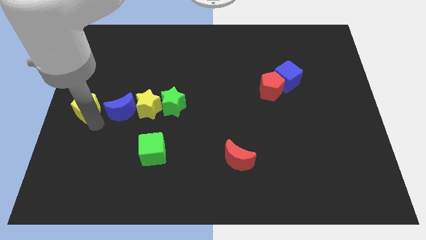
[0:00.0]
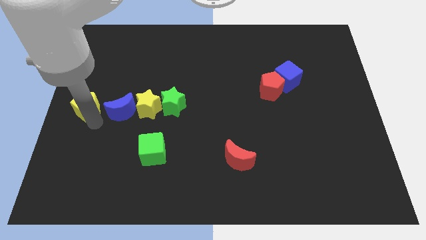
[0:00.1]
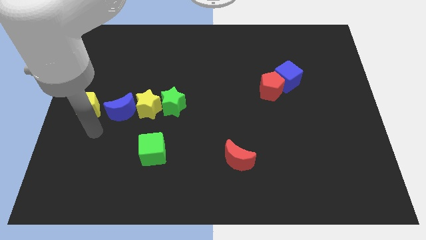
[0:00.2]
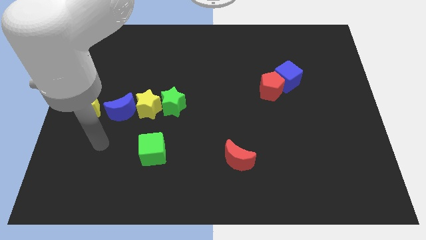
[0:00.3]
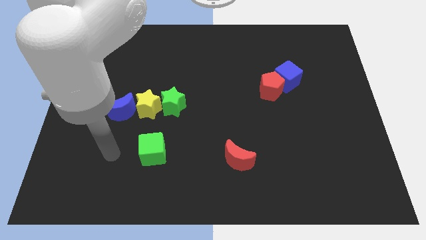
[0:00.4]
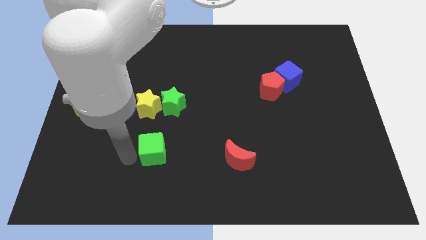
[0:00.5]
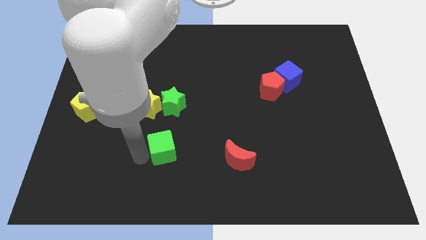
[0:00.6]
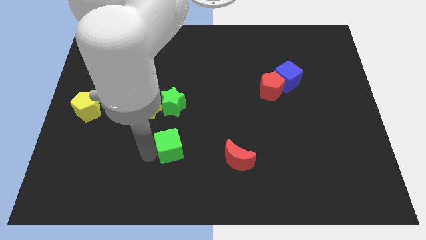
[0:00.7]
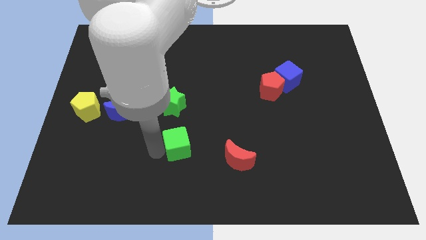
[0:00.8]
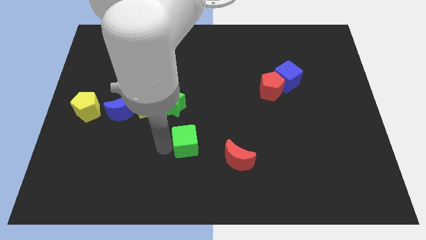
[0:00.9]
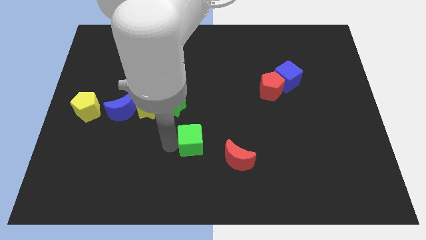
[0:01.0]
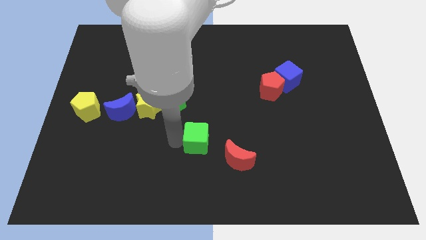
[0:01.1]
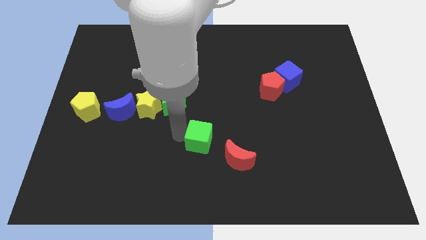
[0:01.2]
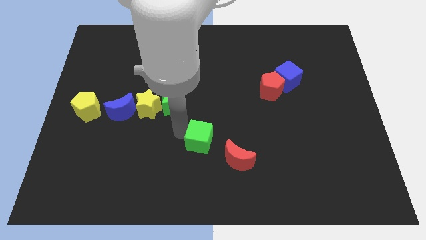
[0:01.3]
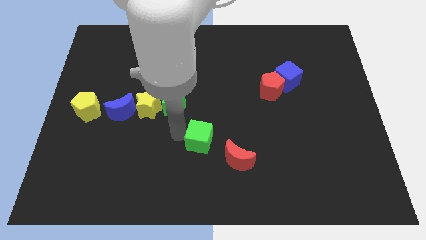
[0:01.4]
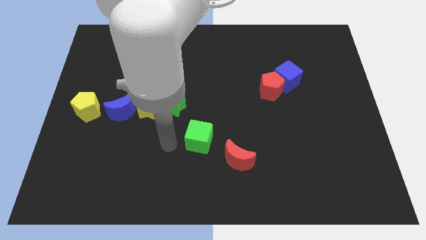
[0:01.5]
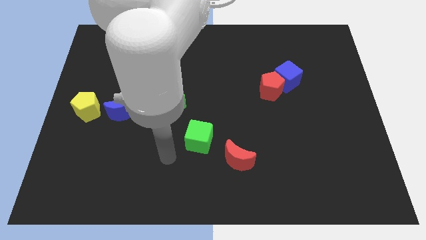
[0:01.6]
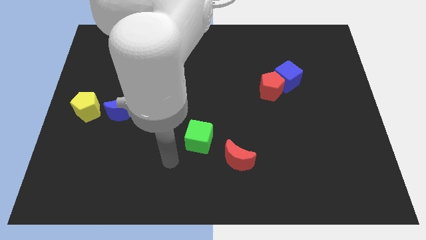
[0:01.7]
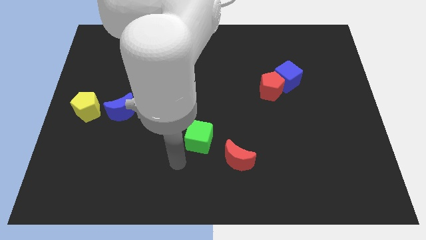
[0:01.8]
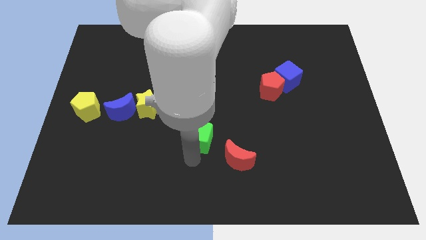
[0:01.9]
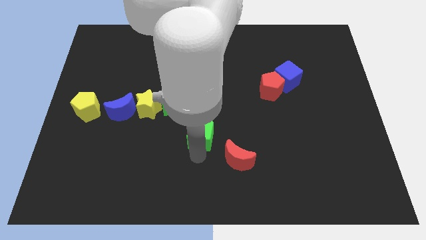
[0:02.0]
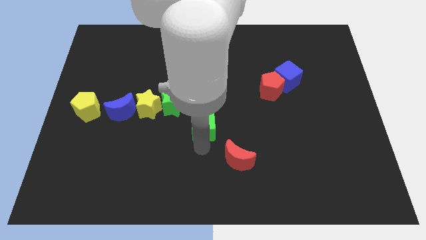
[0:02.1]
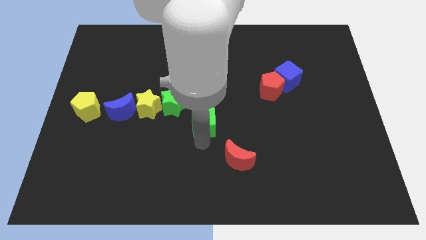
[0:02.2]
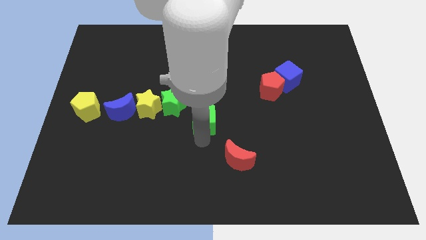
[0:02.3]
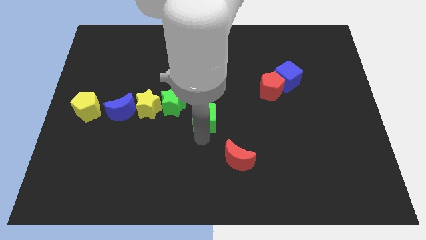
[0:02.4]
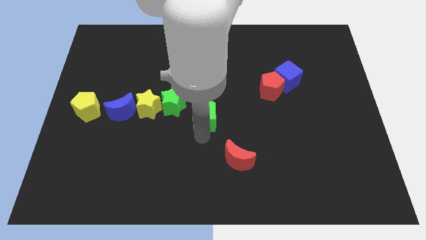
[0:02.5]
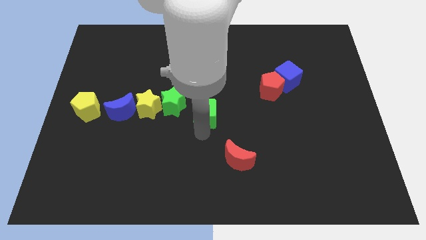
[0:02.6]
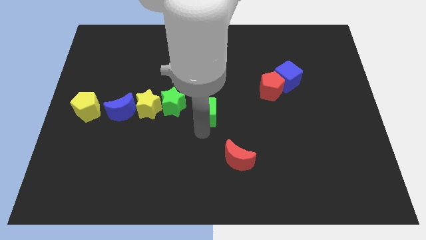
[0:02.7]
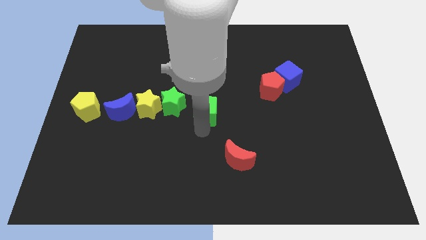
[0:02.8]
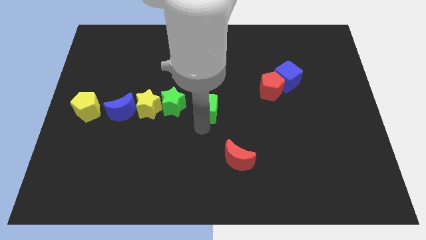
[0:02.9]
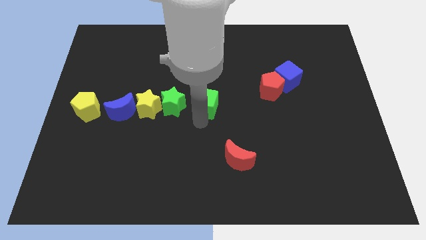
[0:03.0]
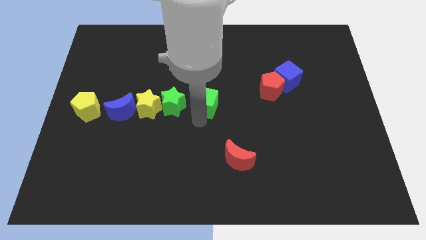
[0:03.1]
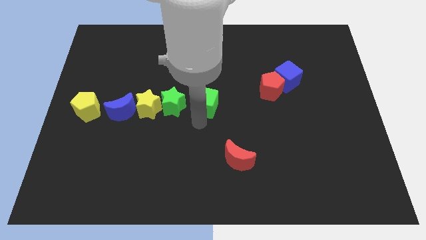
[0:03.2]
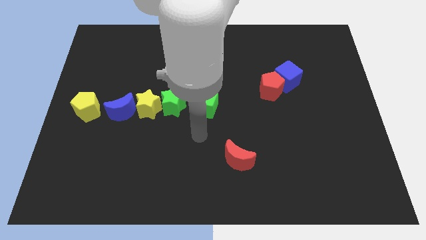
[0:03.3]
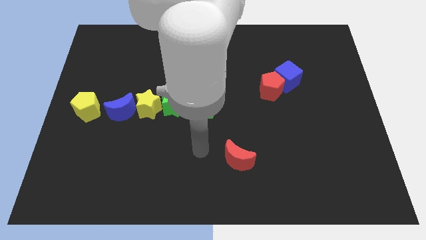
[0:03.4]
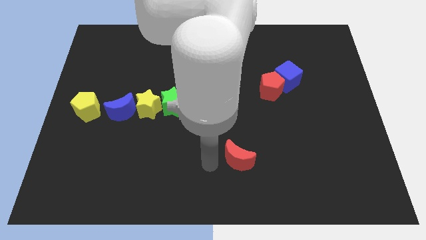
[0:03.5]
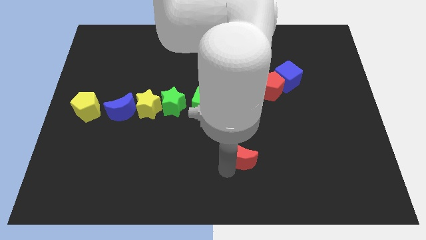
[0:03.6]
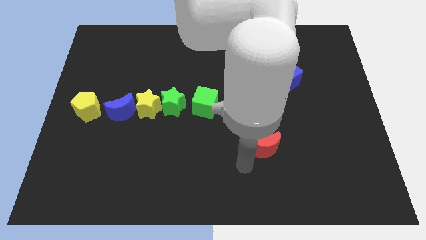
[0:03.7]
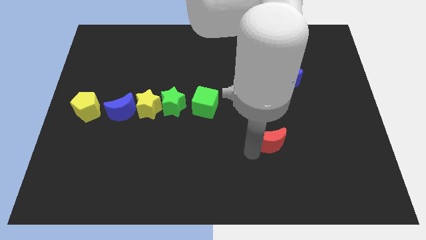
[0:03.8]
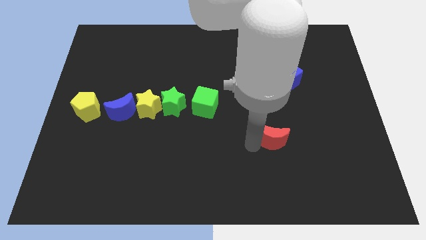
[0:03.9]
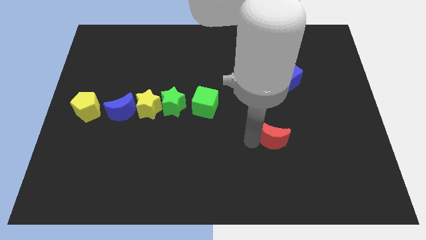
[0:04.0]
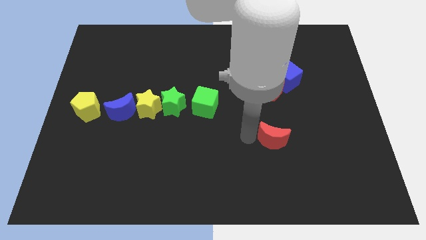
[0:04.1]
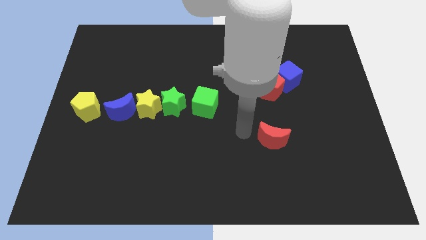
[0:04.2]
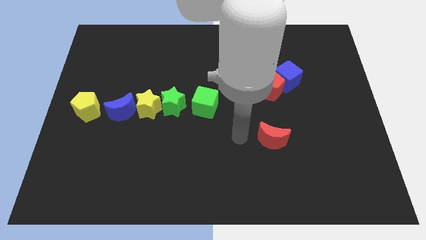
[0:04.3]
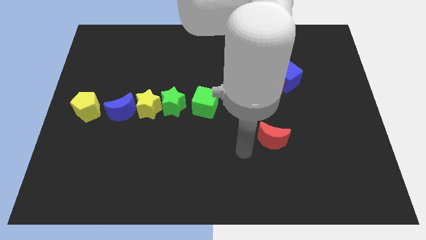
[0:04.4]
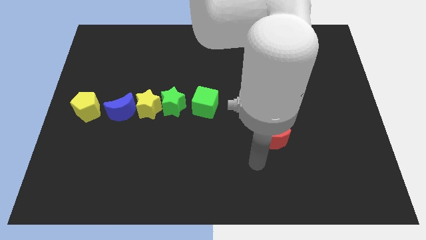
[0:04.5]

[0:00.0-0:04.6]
place the green cube beside the green star

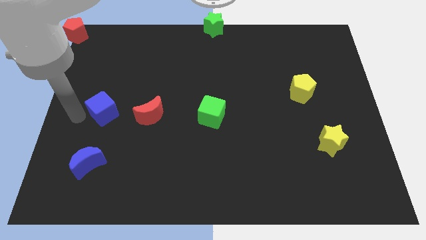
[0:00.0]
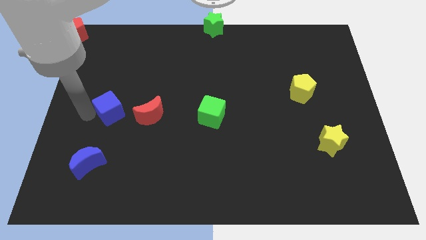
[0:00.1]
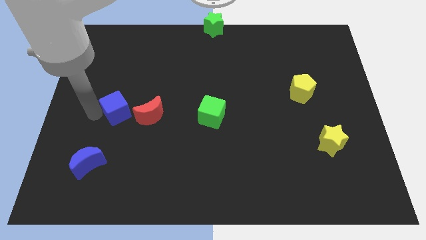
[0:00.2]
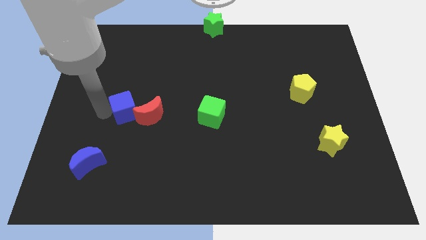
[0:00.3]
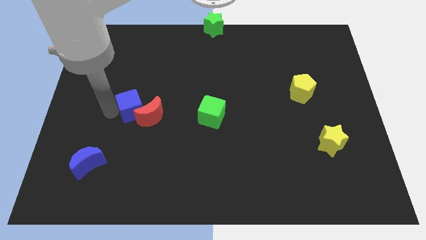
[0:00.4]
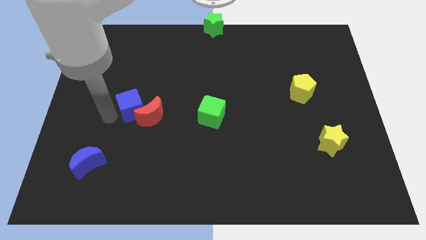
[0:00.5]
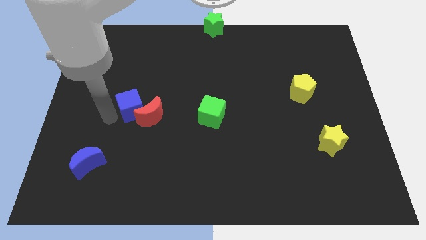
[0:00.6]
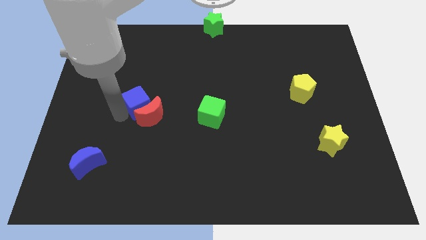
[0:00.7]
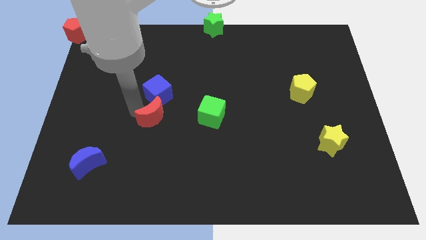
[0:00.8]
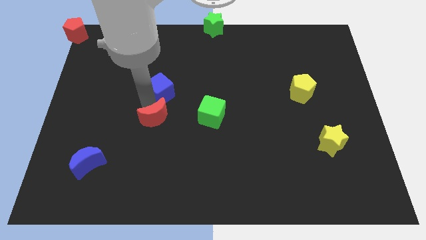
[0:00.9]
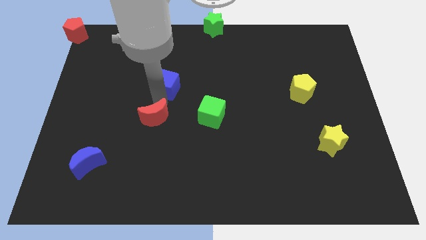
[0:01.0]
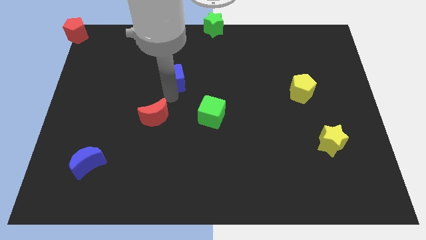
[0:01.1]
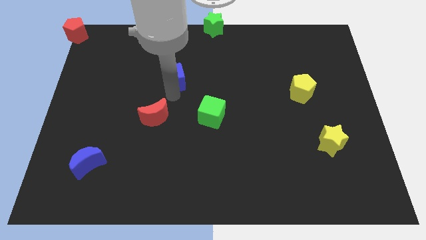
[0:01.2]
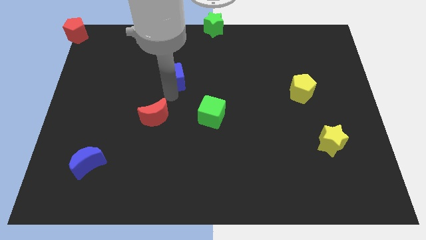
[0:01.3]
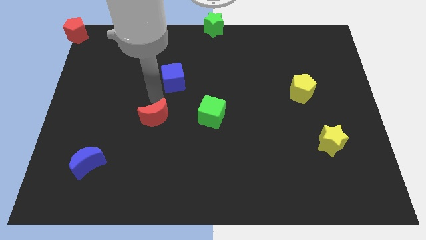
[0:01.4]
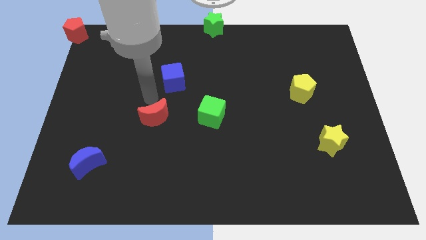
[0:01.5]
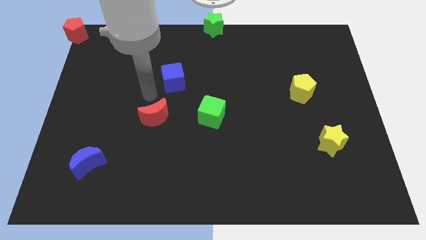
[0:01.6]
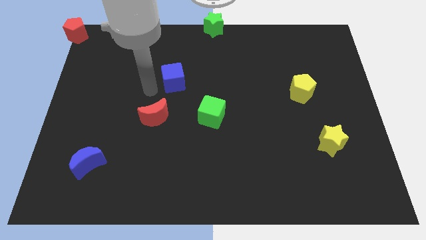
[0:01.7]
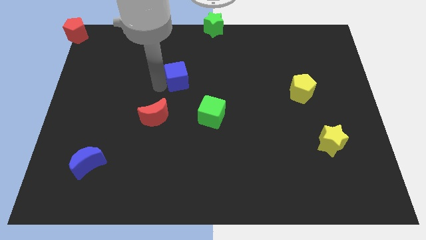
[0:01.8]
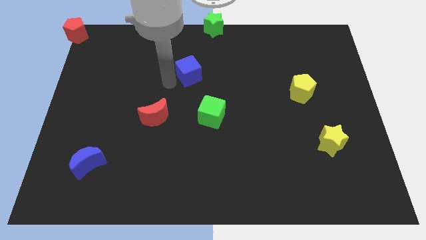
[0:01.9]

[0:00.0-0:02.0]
move the blue cube away from the red moon

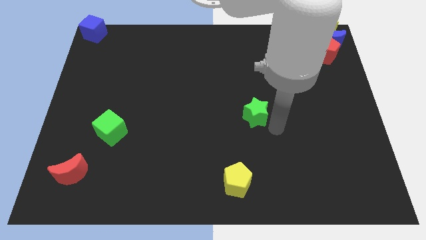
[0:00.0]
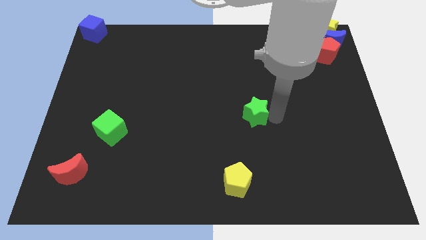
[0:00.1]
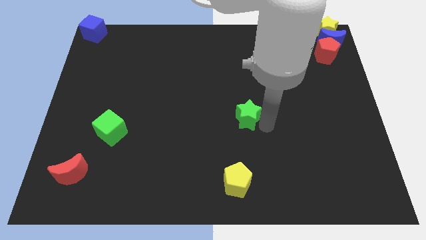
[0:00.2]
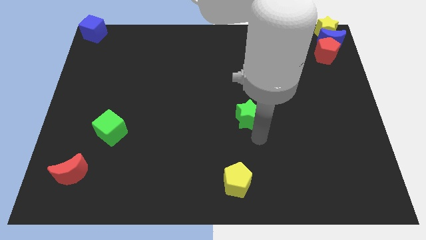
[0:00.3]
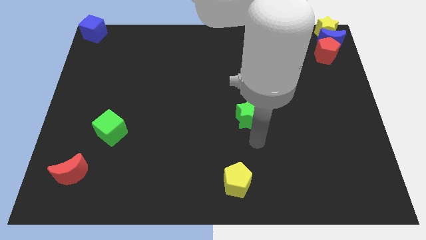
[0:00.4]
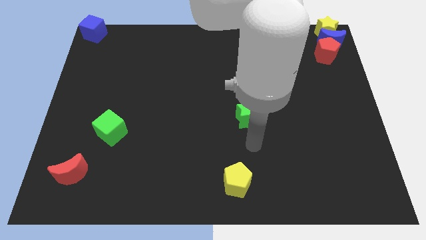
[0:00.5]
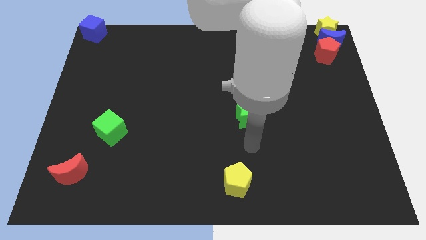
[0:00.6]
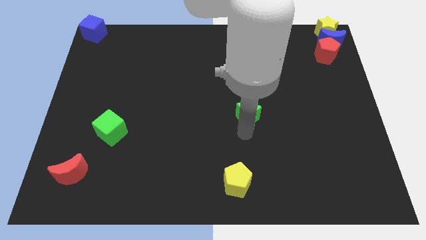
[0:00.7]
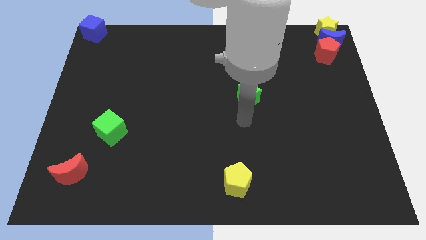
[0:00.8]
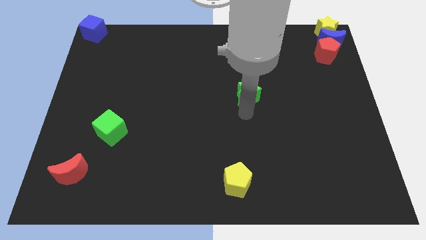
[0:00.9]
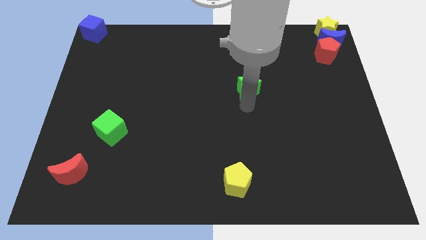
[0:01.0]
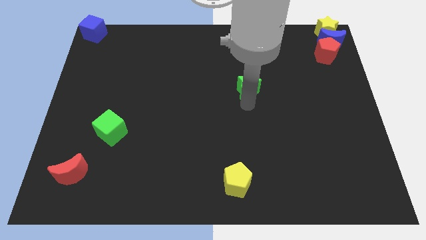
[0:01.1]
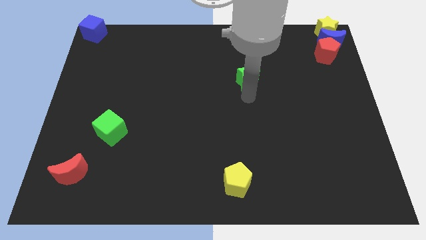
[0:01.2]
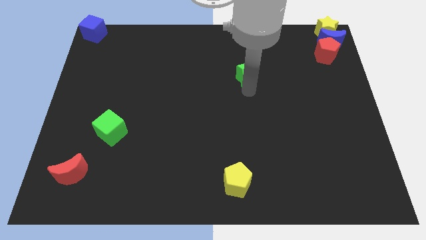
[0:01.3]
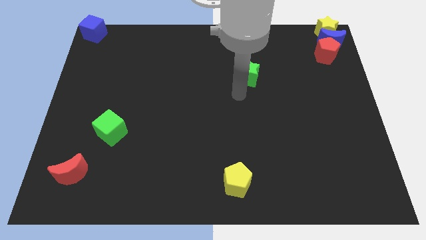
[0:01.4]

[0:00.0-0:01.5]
push the green star slightly to the top

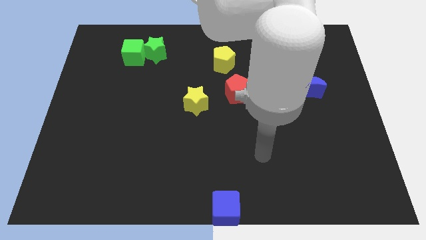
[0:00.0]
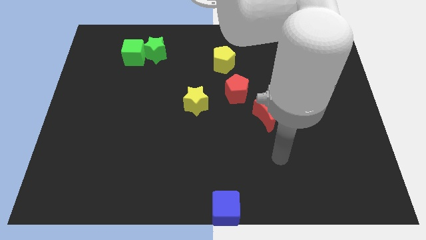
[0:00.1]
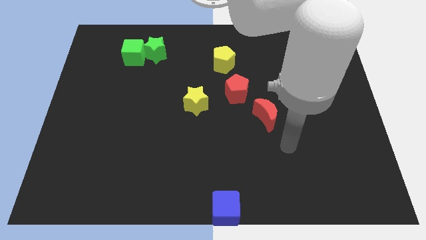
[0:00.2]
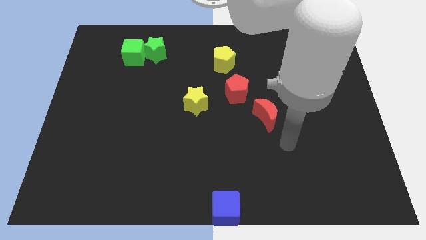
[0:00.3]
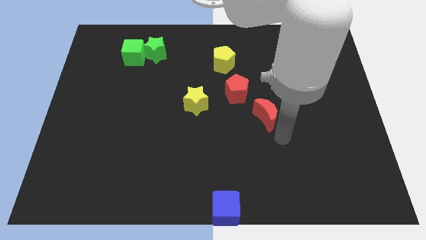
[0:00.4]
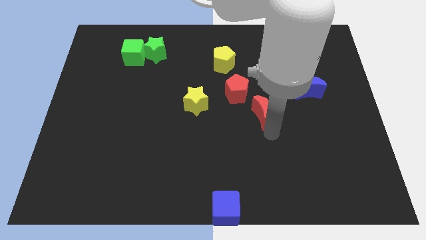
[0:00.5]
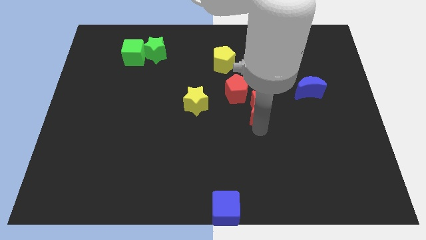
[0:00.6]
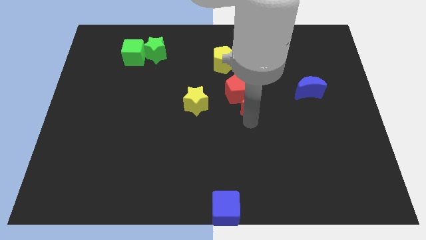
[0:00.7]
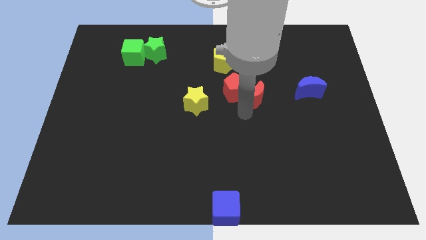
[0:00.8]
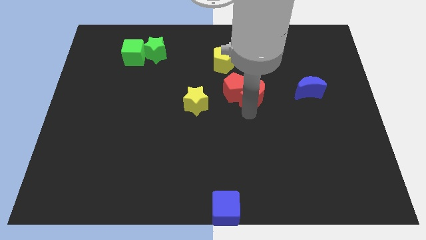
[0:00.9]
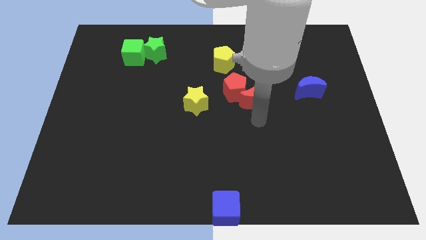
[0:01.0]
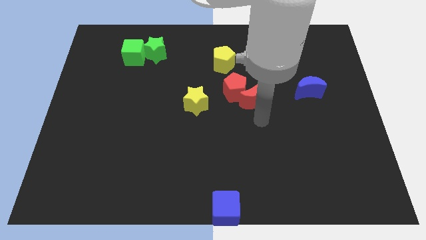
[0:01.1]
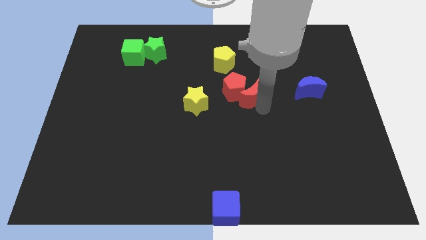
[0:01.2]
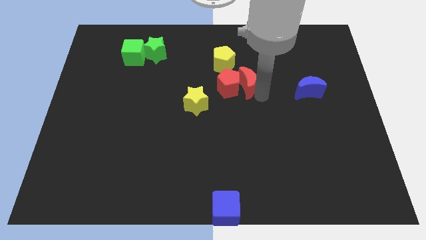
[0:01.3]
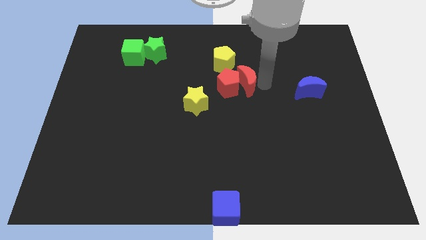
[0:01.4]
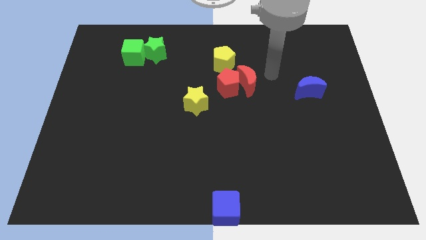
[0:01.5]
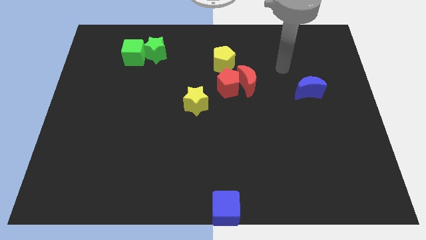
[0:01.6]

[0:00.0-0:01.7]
push red crescent beside red pentagon
